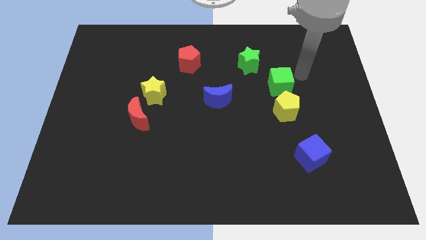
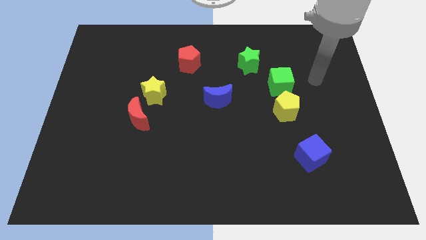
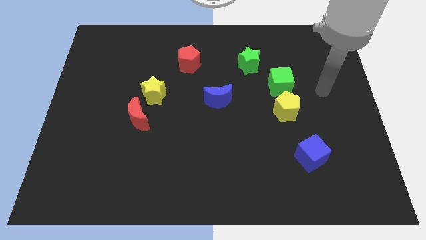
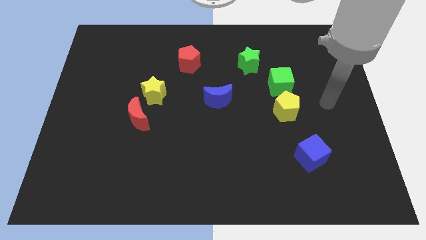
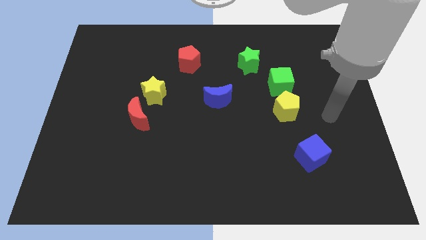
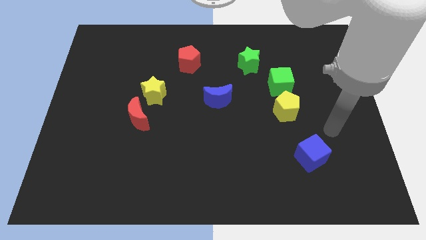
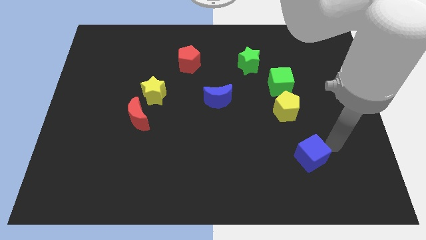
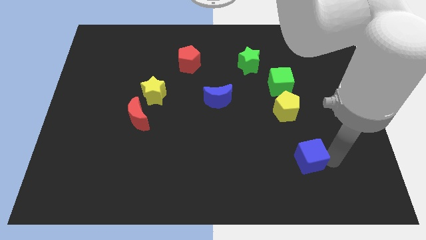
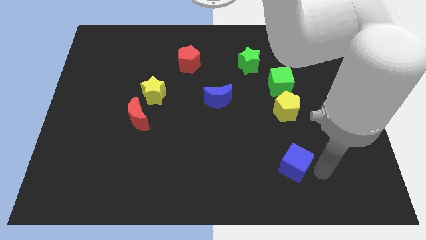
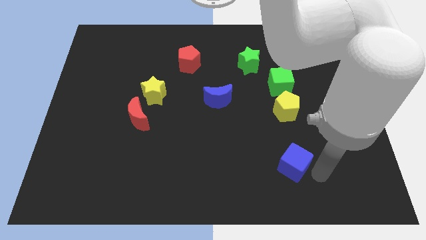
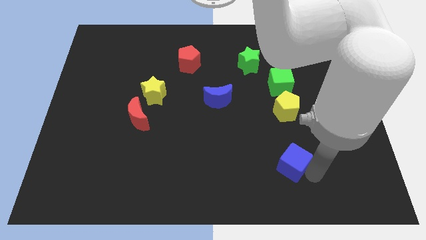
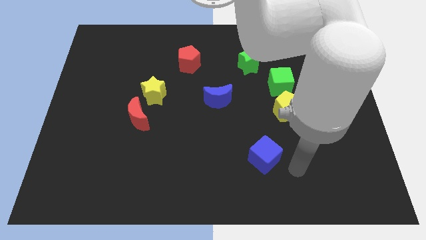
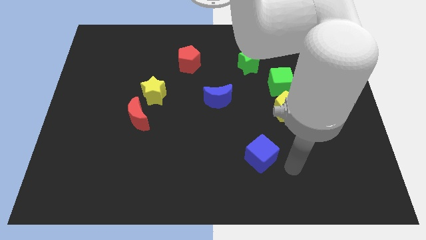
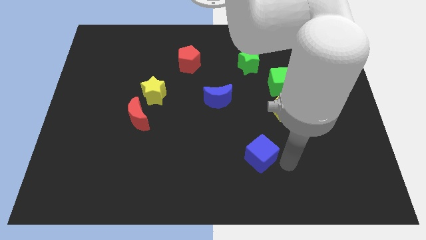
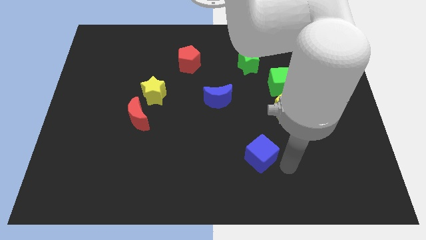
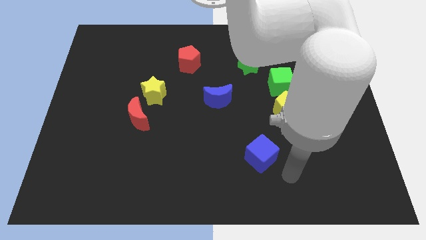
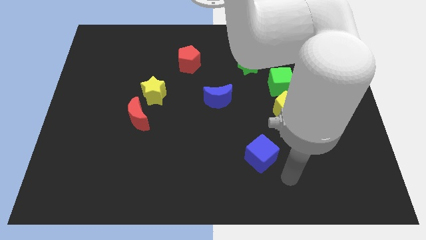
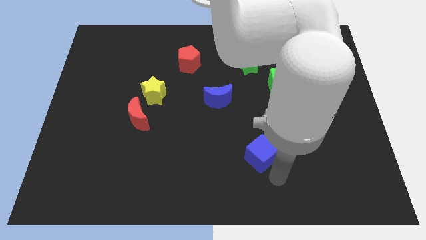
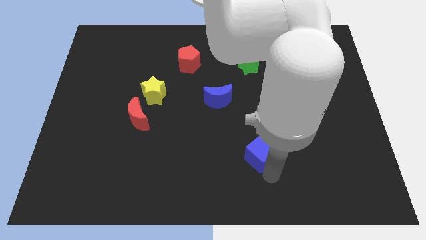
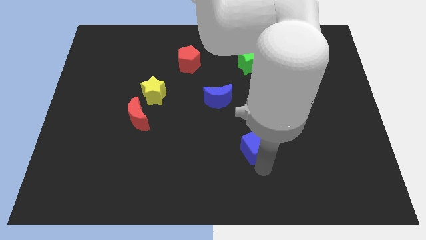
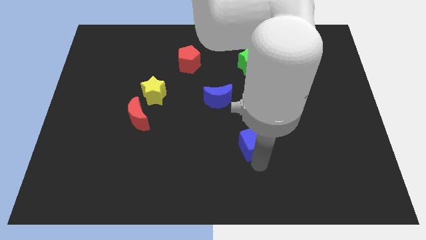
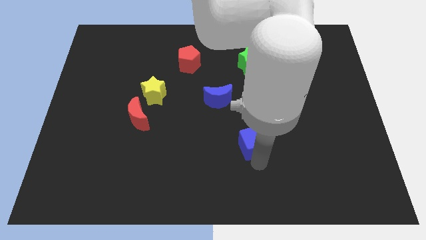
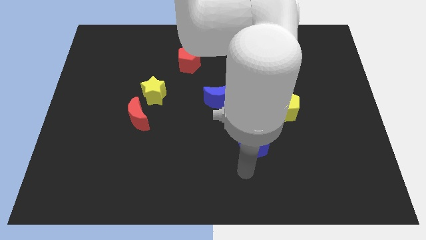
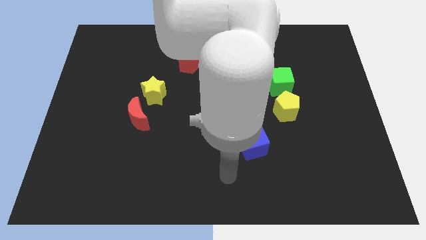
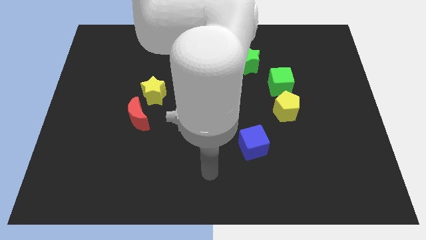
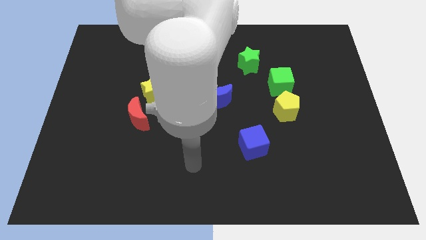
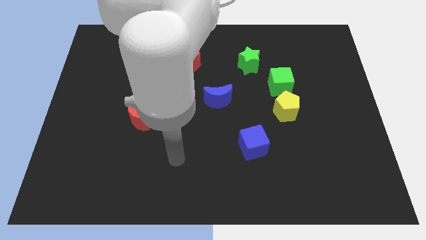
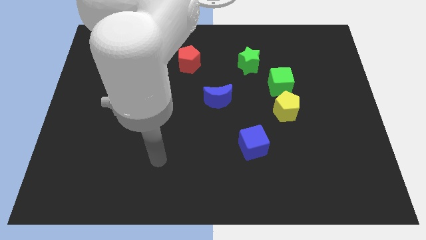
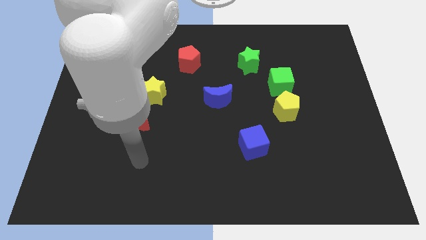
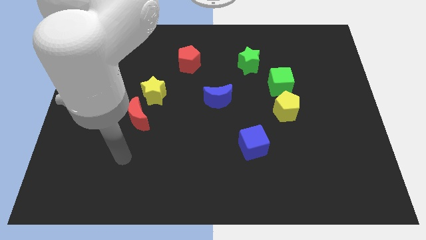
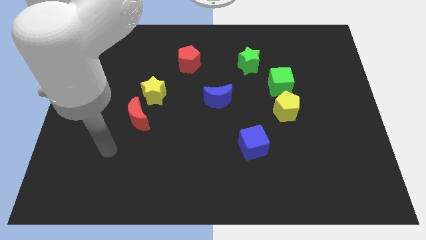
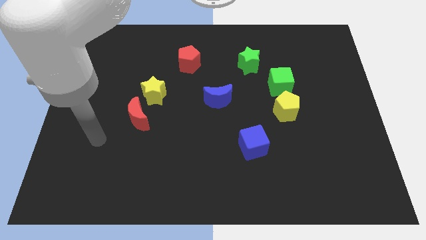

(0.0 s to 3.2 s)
drag the blue cube slightly at the bottom left side of the yellow pentagon

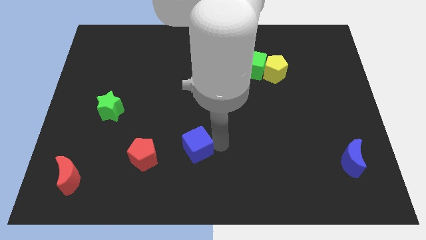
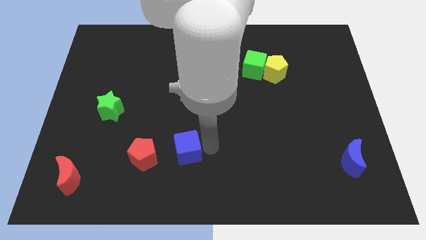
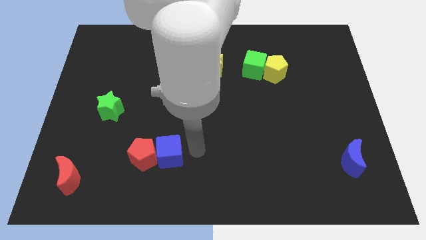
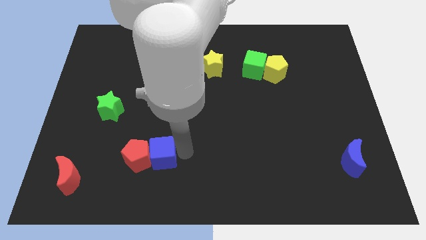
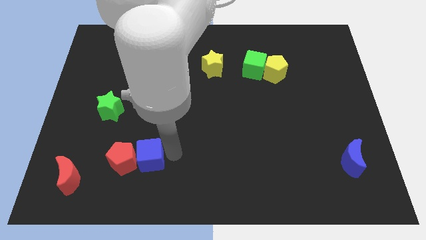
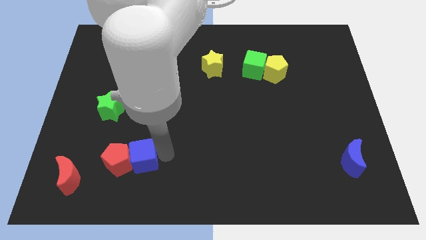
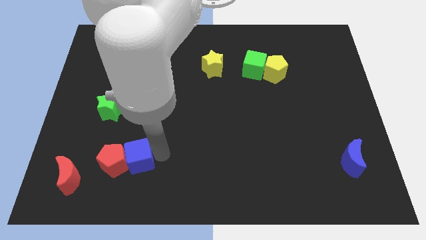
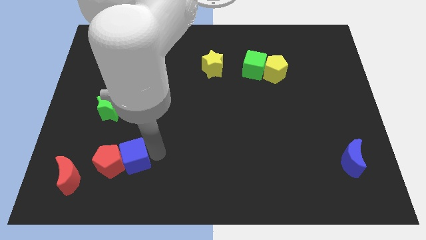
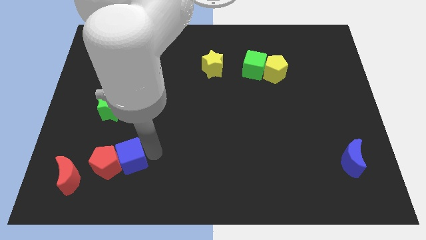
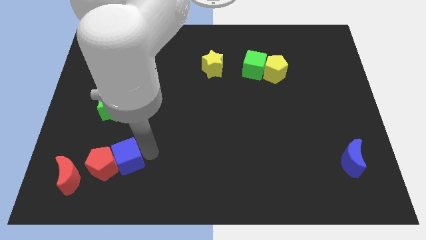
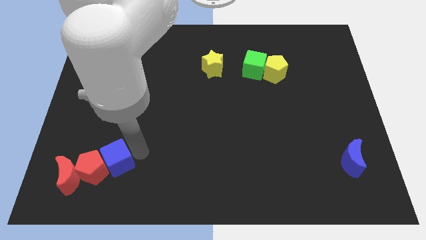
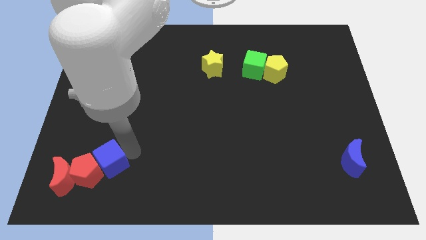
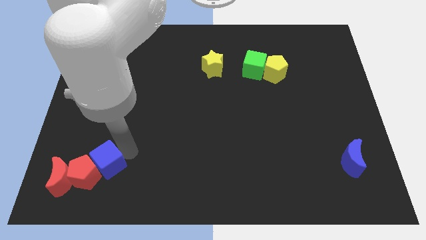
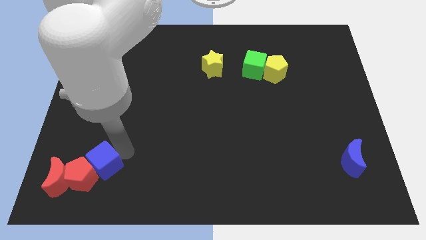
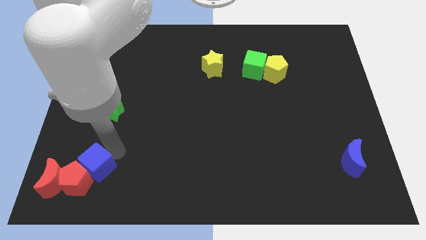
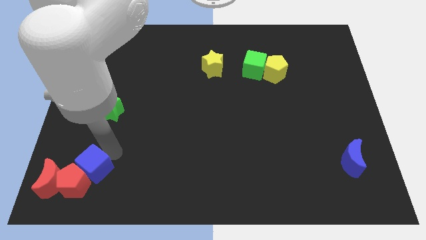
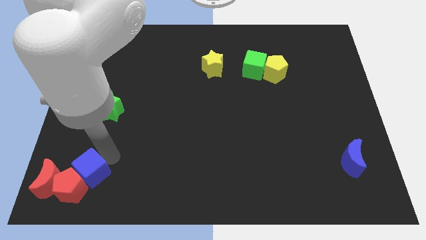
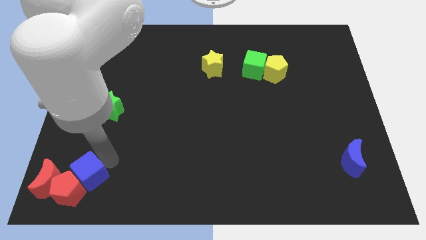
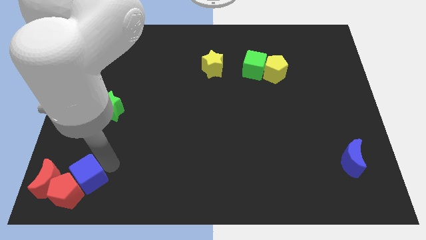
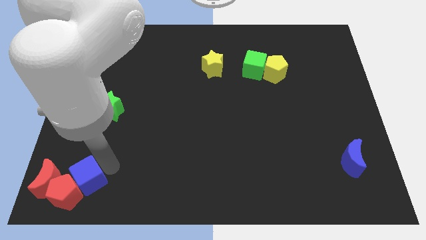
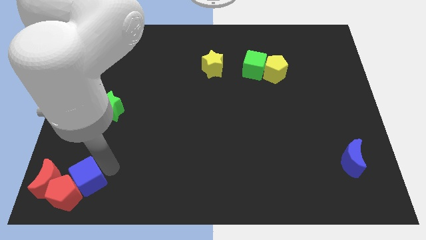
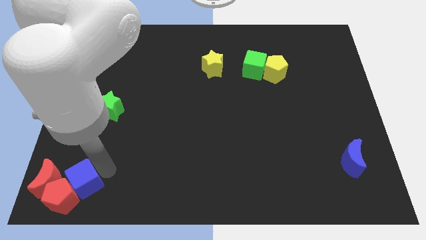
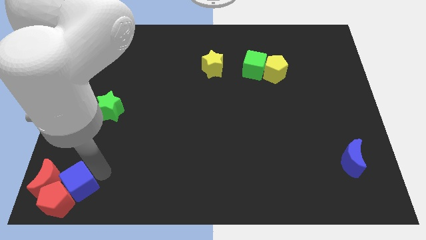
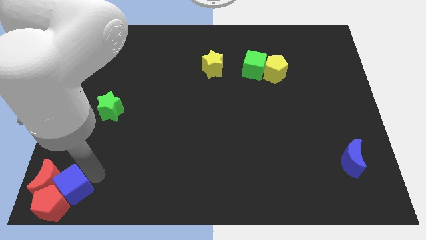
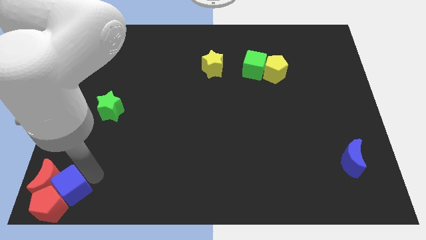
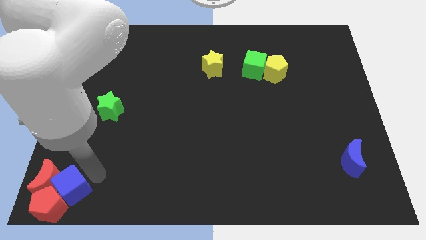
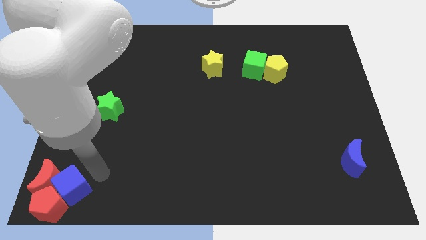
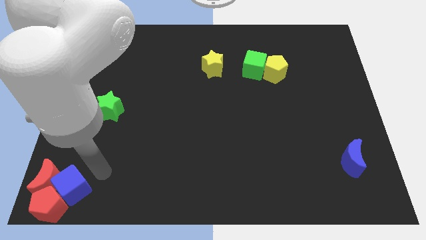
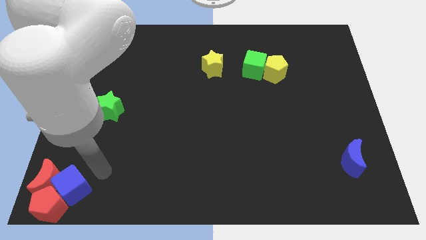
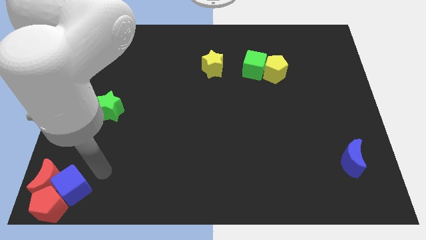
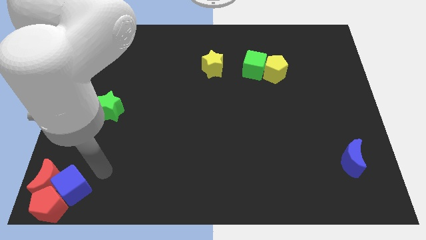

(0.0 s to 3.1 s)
move the blue cube and red pentagon together to the bottom left side corner

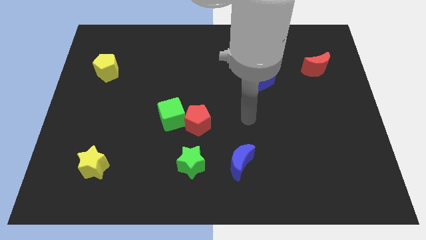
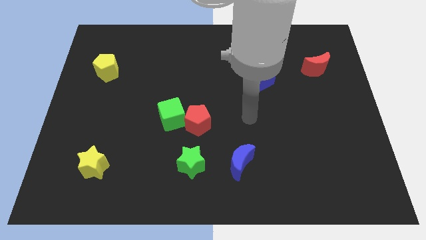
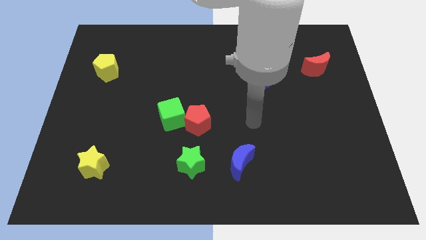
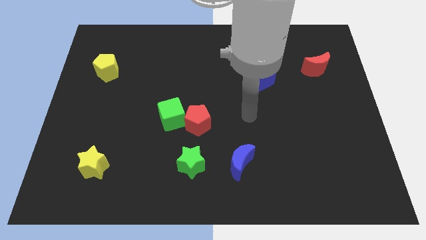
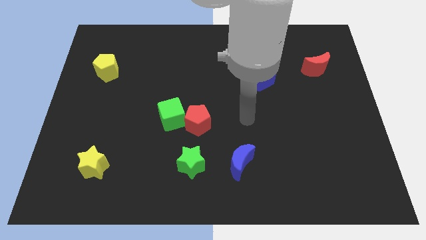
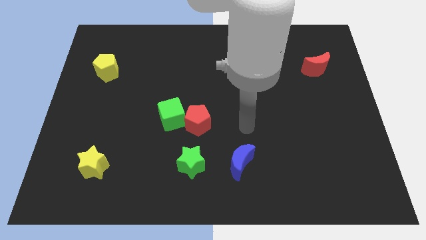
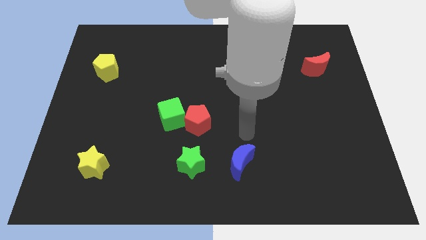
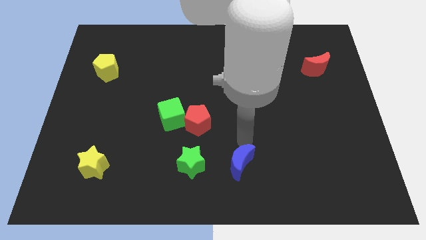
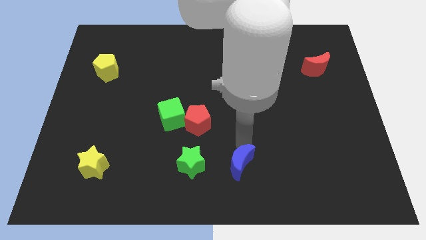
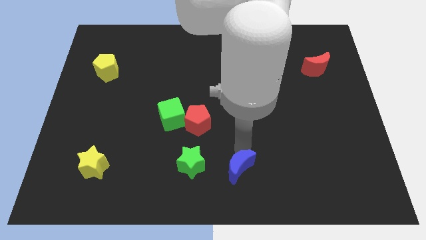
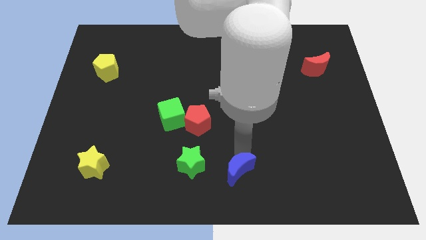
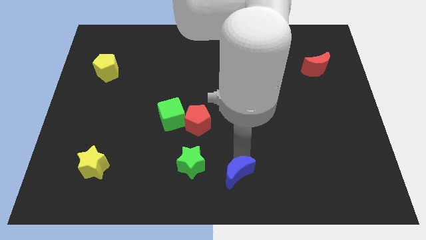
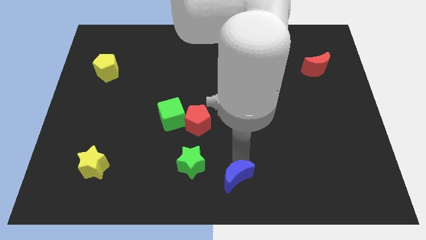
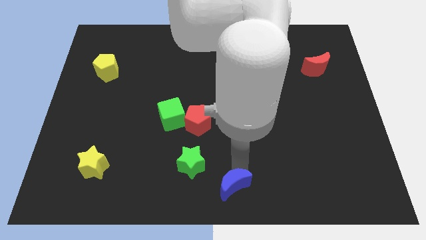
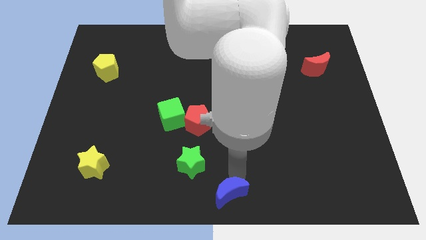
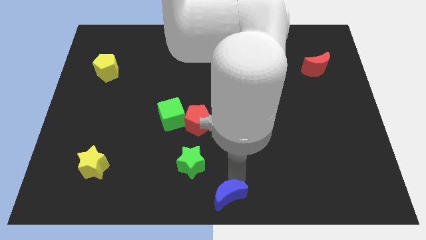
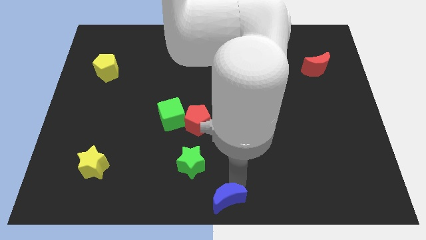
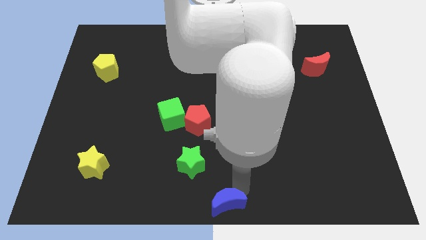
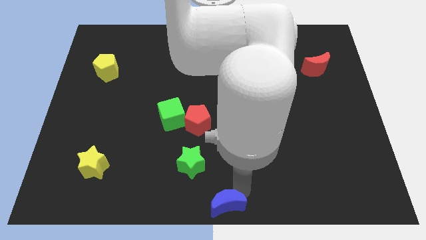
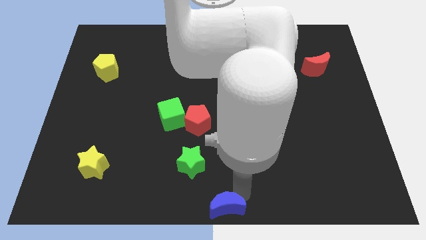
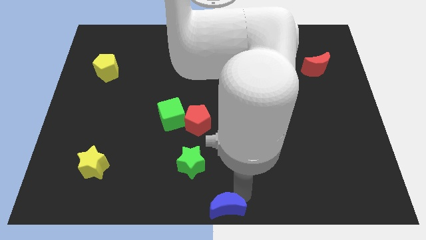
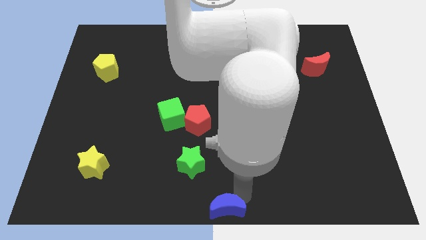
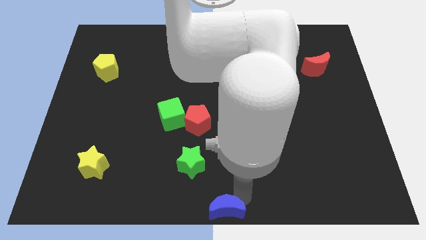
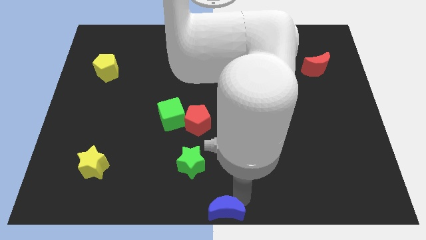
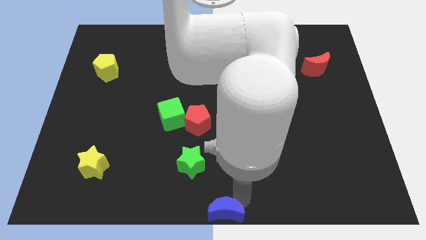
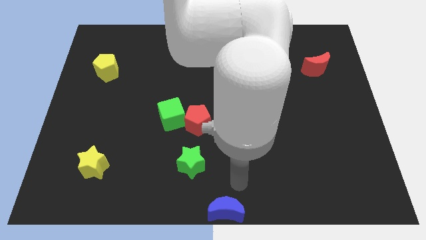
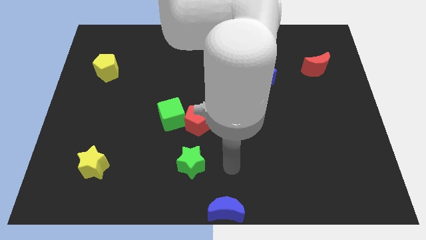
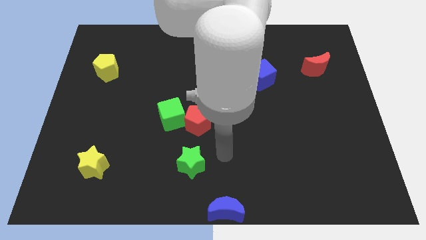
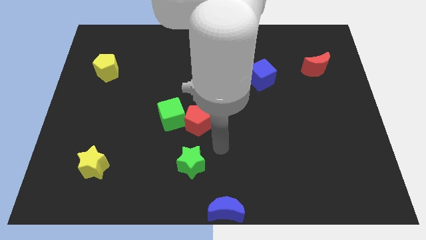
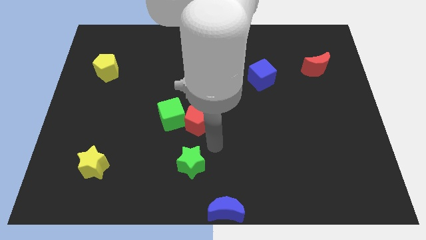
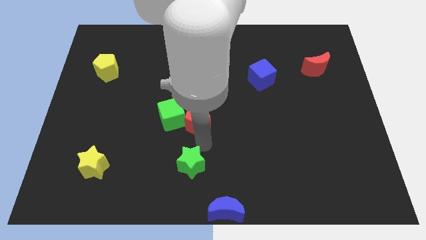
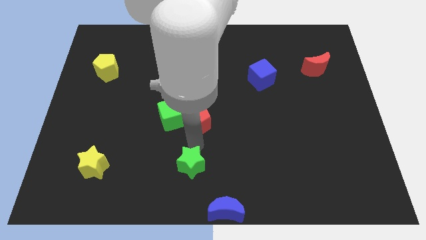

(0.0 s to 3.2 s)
place the blue crescent at the bottom center of the board
